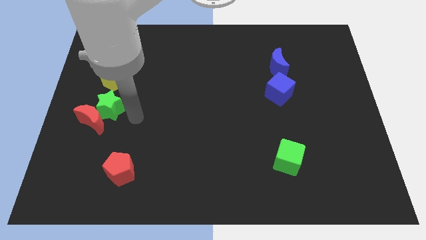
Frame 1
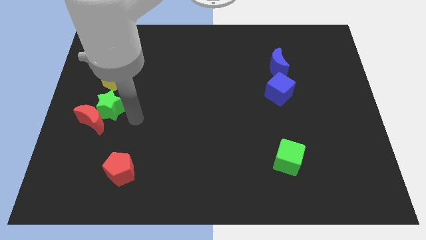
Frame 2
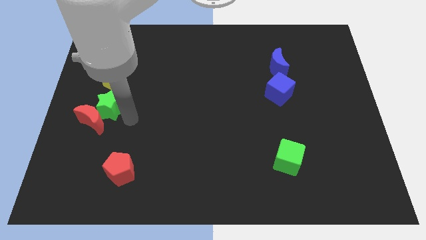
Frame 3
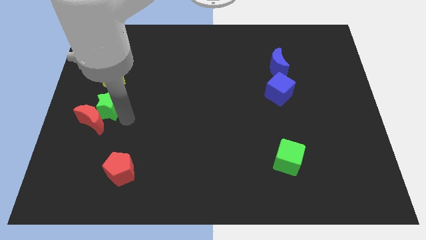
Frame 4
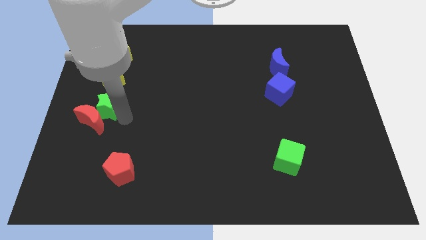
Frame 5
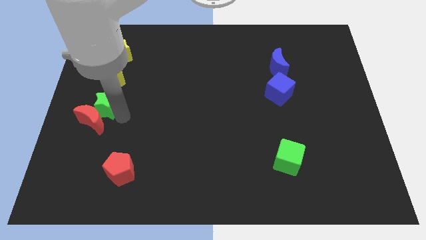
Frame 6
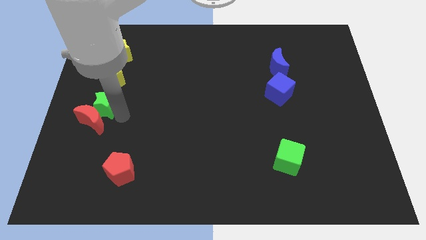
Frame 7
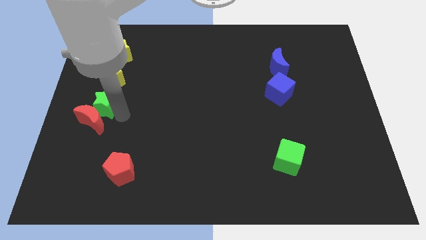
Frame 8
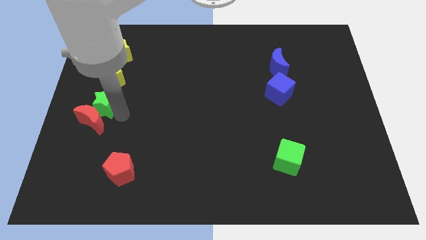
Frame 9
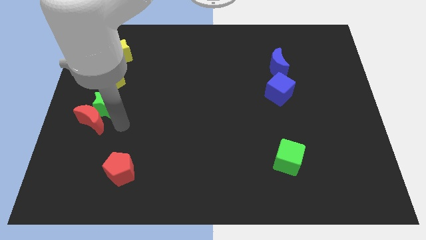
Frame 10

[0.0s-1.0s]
move the green star slightly to the left

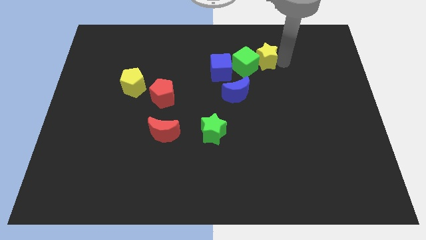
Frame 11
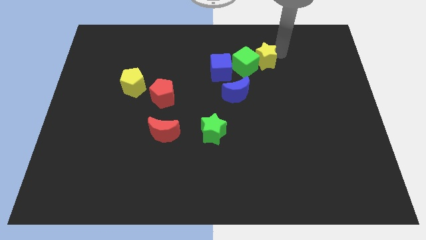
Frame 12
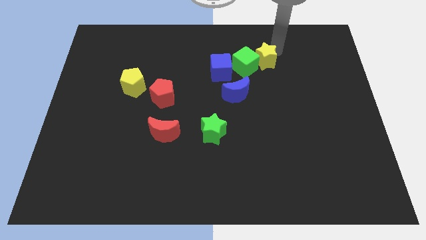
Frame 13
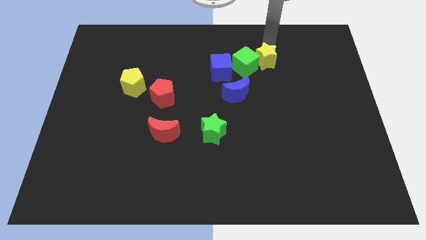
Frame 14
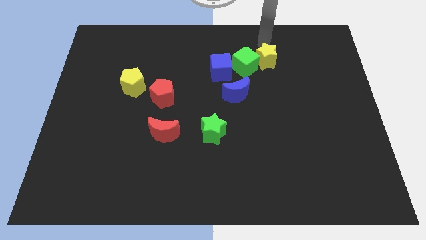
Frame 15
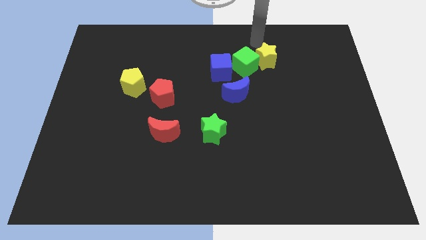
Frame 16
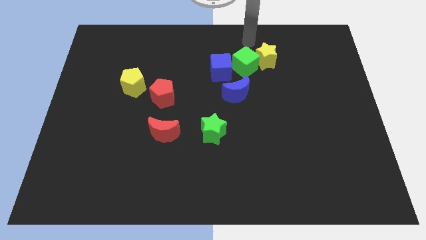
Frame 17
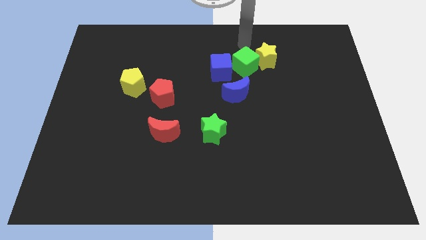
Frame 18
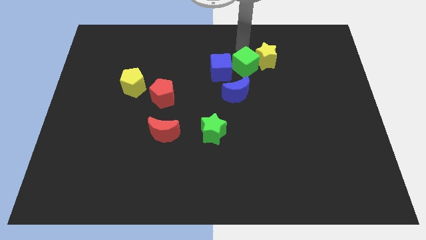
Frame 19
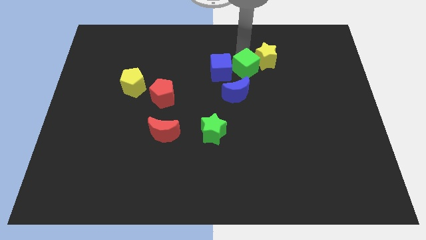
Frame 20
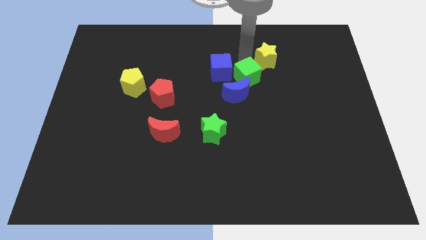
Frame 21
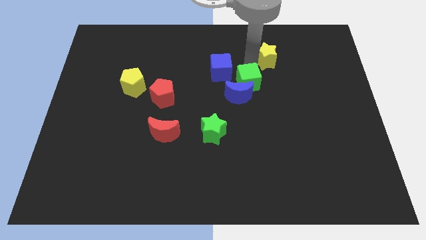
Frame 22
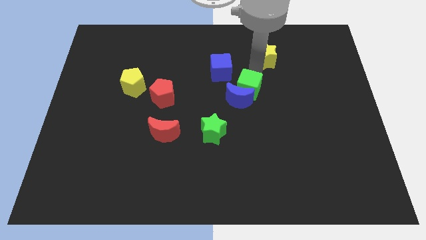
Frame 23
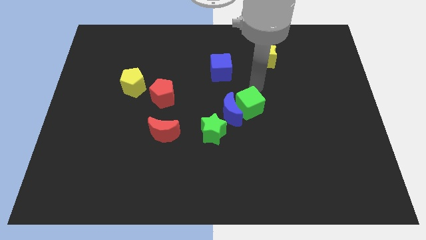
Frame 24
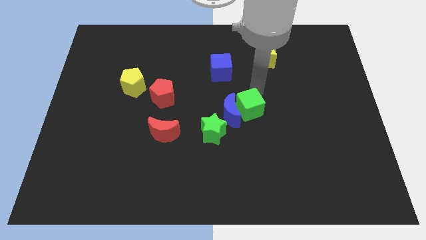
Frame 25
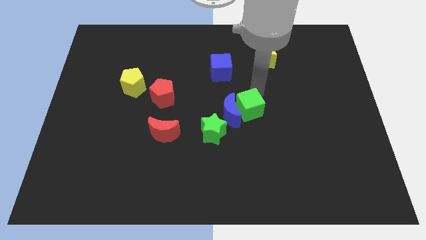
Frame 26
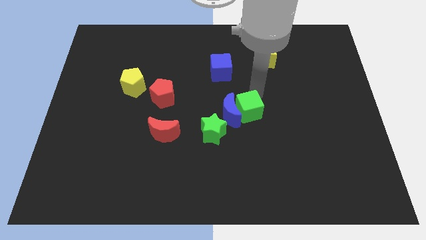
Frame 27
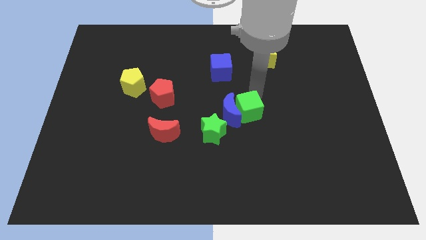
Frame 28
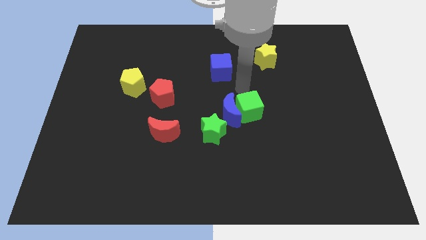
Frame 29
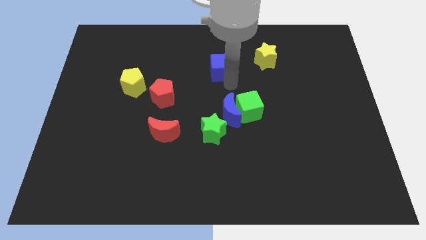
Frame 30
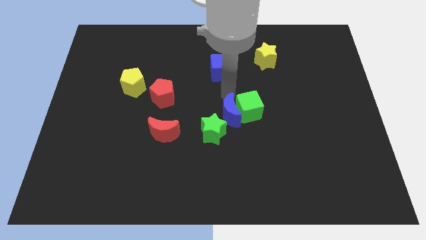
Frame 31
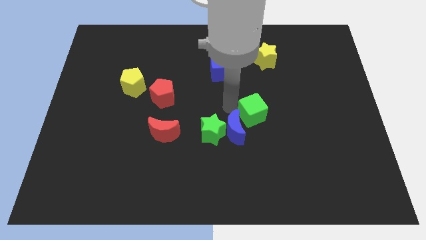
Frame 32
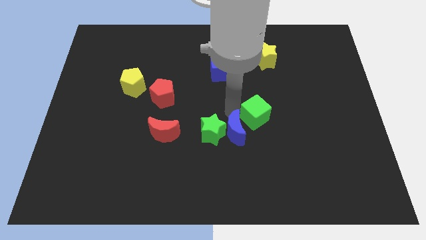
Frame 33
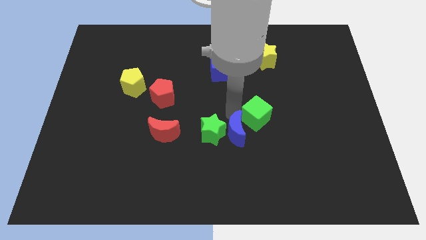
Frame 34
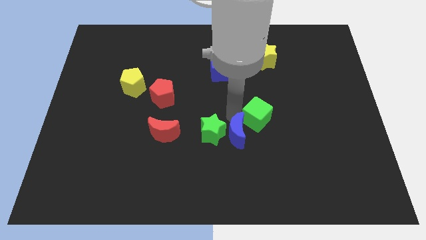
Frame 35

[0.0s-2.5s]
move the green cube along with the blue moon towards the center of the board

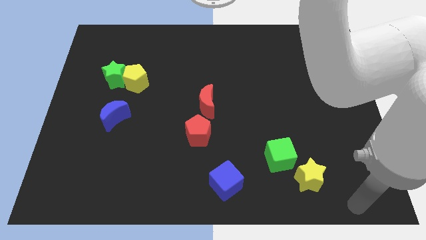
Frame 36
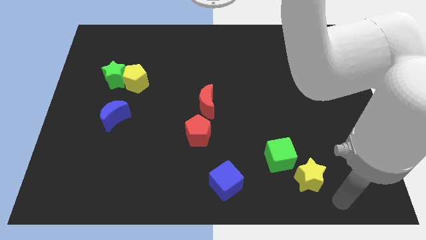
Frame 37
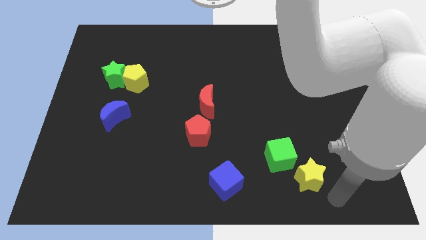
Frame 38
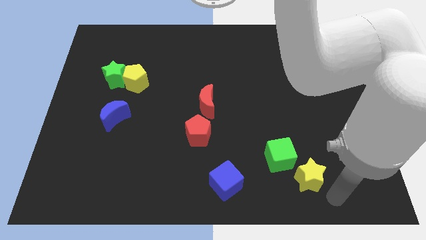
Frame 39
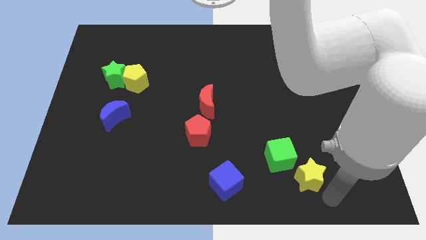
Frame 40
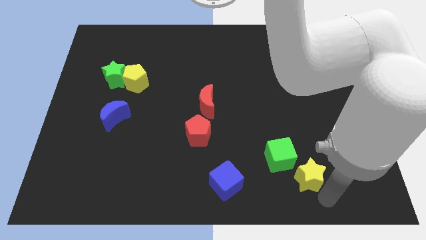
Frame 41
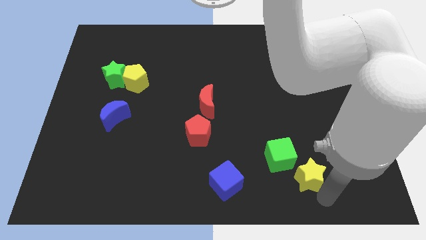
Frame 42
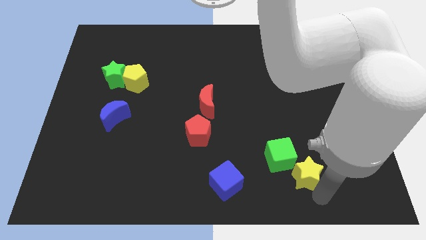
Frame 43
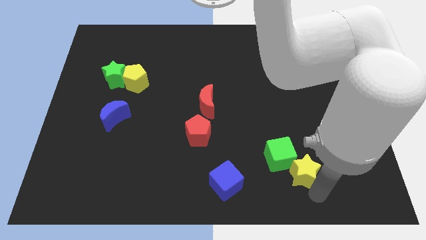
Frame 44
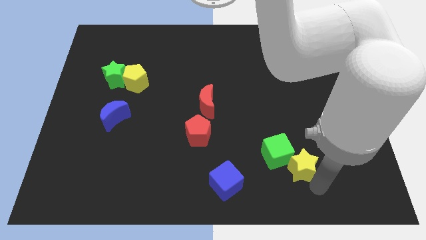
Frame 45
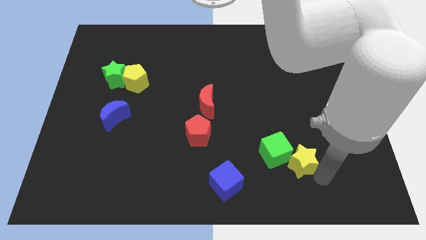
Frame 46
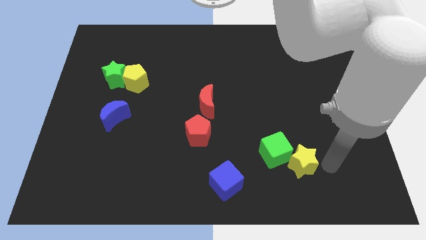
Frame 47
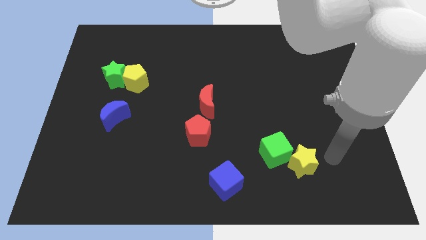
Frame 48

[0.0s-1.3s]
push the yellow star into the green cube

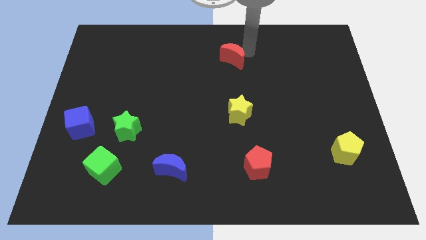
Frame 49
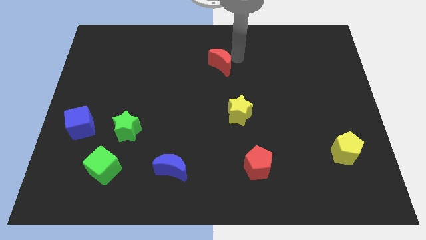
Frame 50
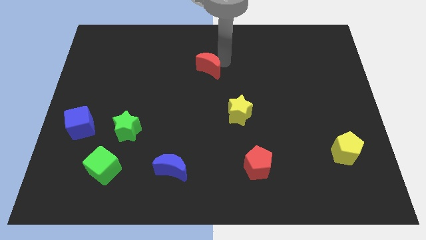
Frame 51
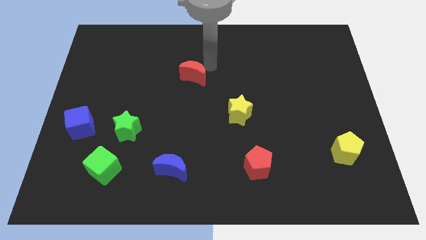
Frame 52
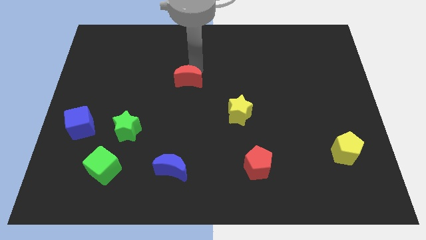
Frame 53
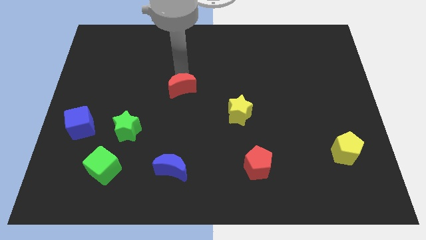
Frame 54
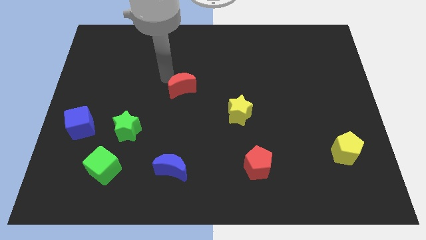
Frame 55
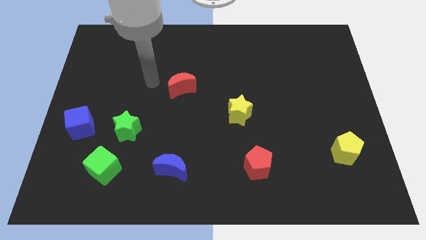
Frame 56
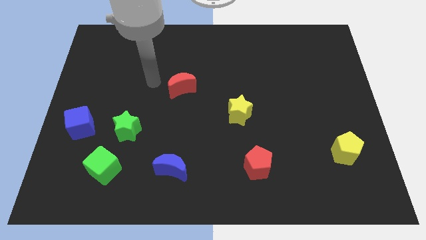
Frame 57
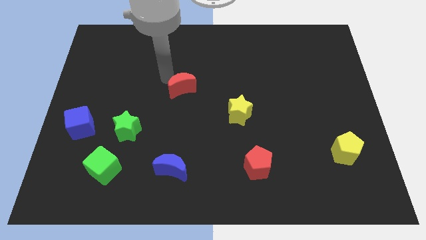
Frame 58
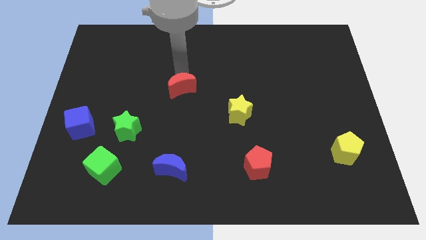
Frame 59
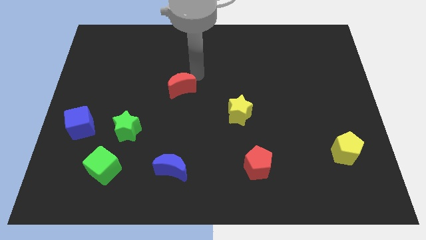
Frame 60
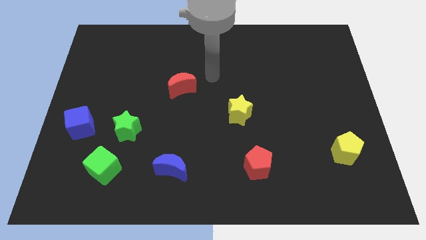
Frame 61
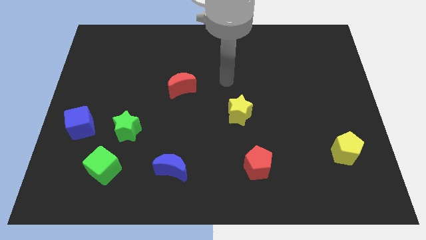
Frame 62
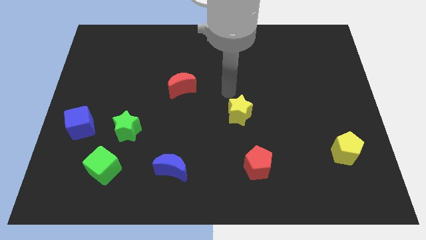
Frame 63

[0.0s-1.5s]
slide the red crescent diagonally on the top right side of the green star

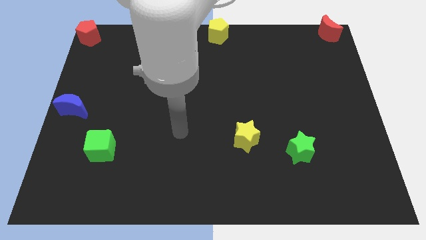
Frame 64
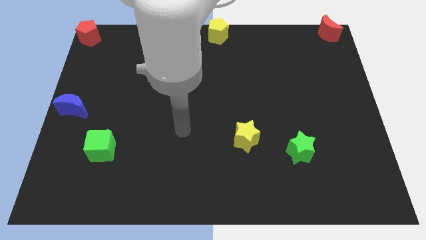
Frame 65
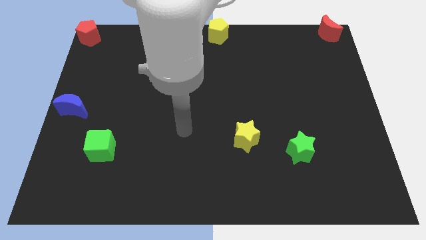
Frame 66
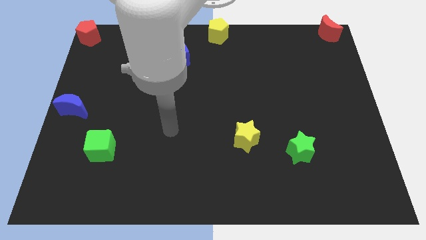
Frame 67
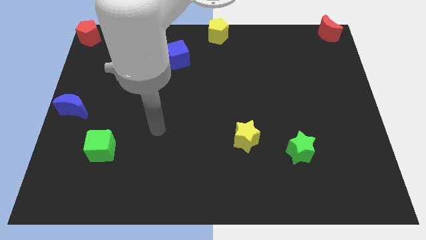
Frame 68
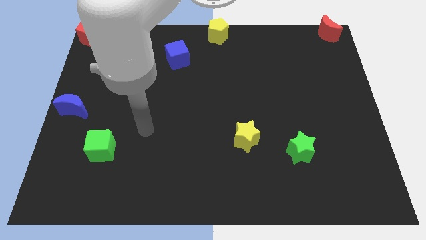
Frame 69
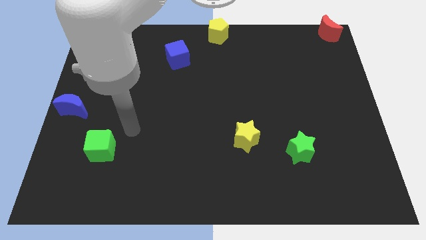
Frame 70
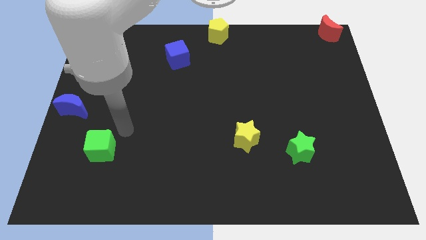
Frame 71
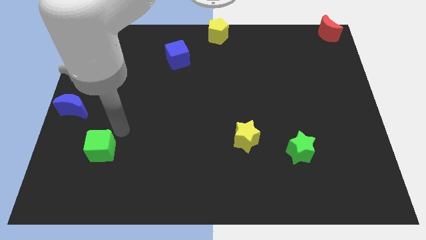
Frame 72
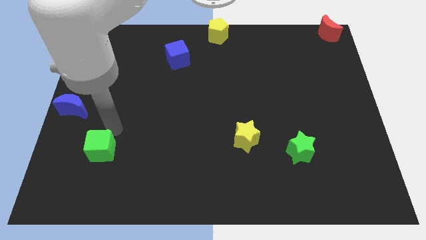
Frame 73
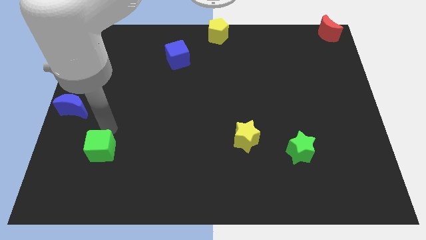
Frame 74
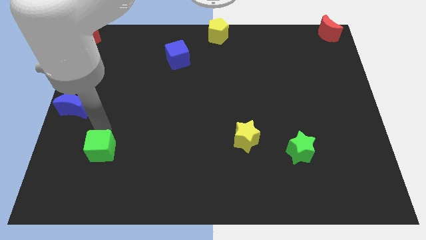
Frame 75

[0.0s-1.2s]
place your arm to the top of the green cube

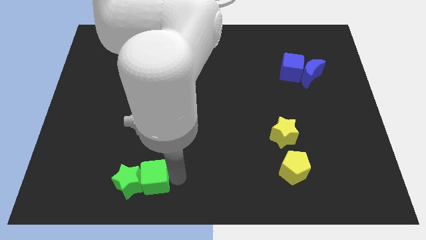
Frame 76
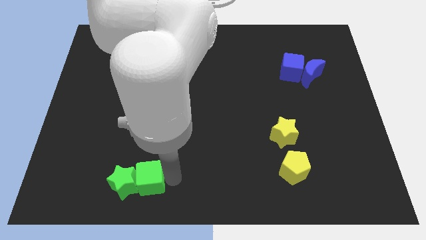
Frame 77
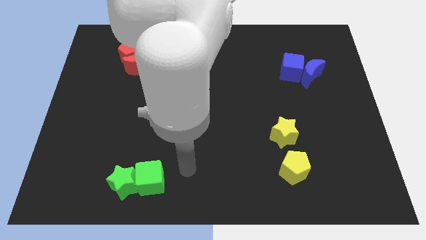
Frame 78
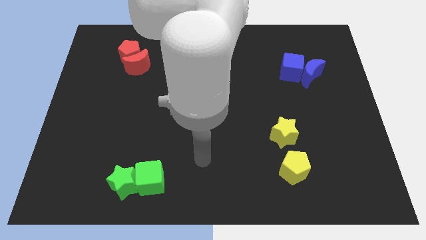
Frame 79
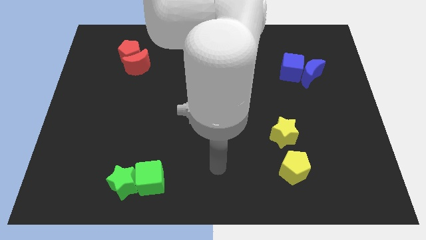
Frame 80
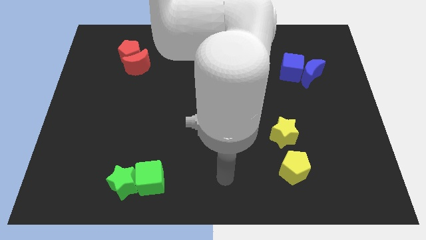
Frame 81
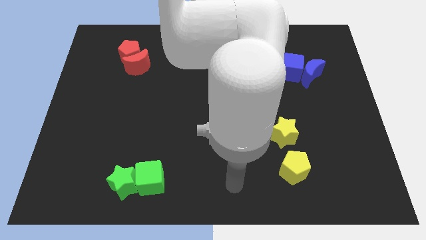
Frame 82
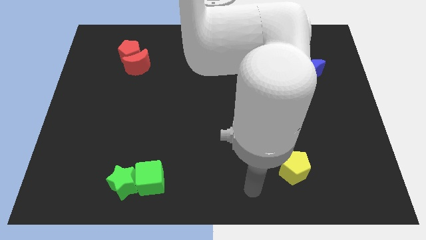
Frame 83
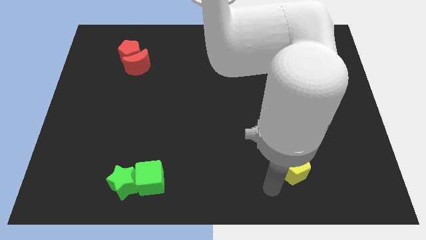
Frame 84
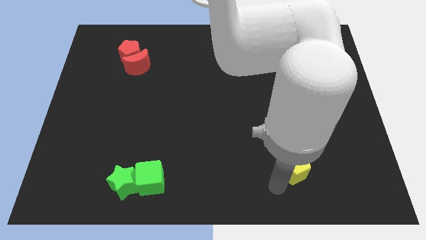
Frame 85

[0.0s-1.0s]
go away from the green cube

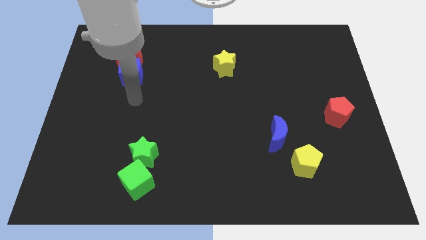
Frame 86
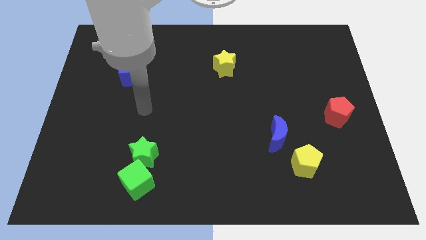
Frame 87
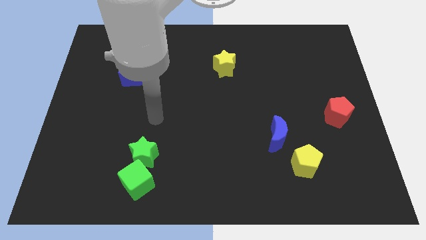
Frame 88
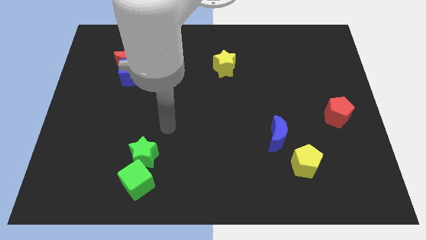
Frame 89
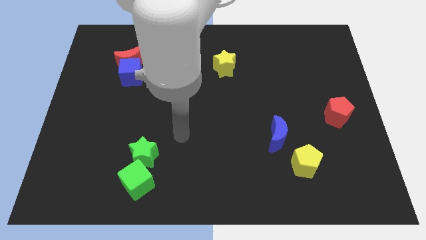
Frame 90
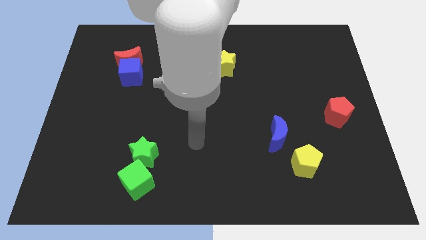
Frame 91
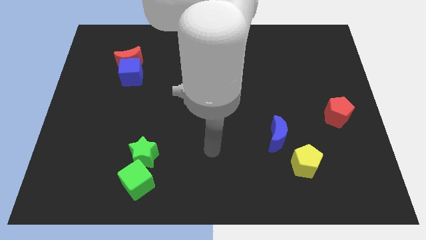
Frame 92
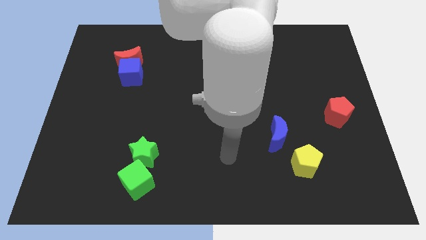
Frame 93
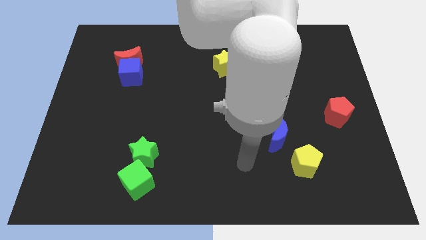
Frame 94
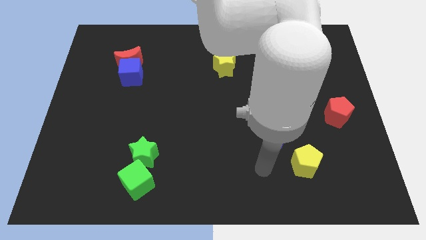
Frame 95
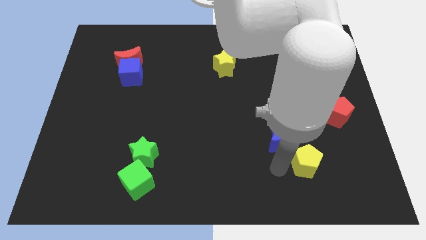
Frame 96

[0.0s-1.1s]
move your arm to the left of yellow pentagon
